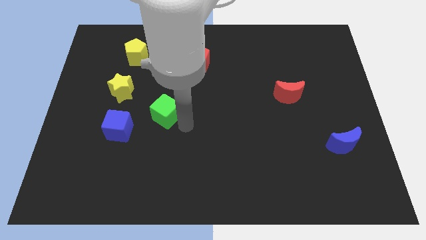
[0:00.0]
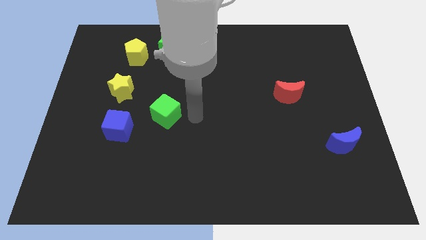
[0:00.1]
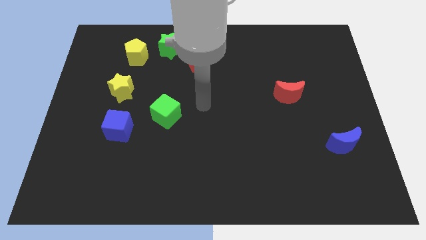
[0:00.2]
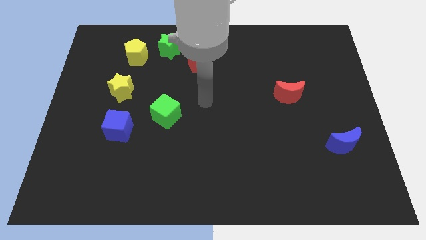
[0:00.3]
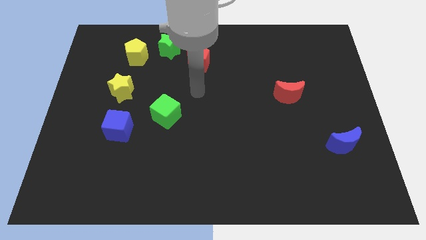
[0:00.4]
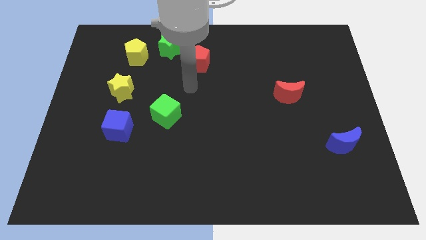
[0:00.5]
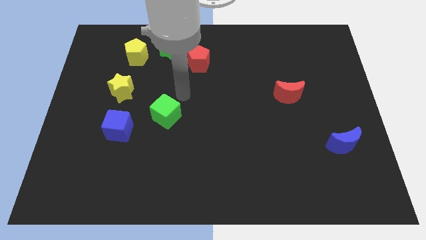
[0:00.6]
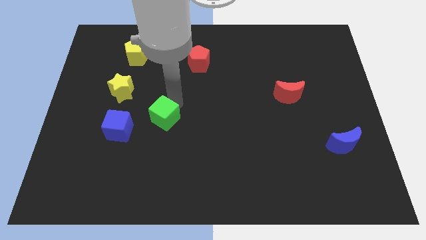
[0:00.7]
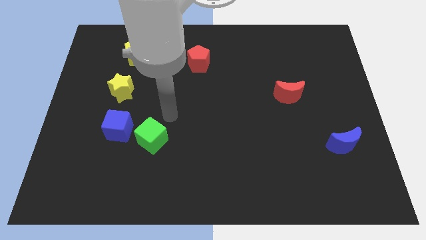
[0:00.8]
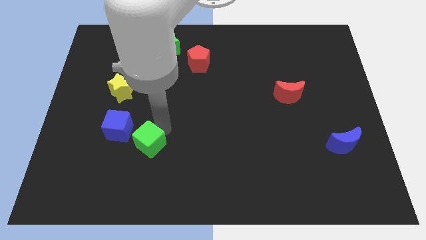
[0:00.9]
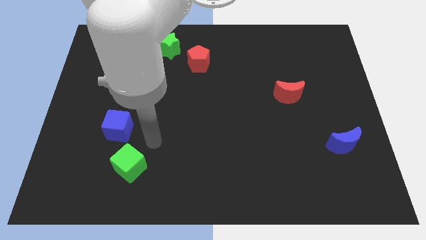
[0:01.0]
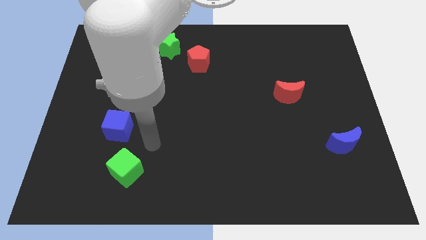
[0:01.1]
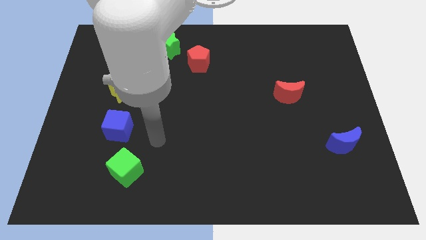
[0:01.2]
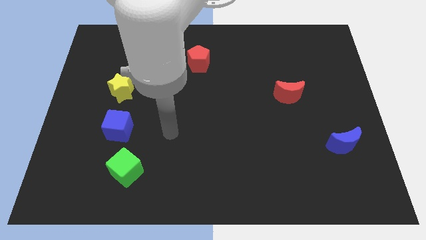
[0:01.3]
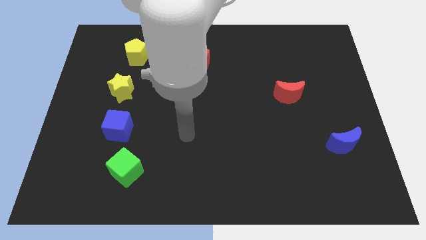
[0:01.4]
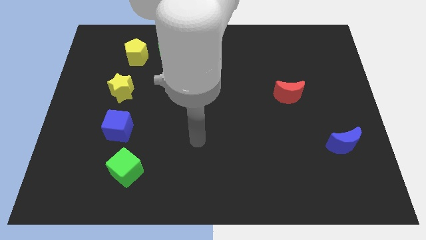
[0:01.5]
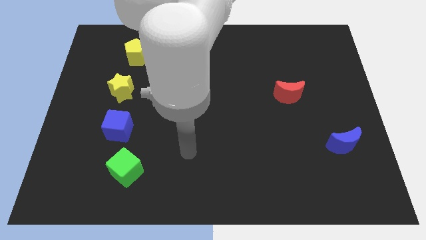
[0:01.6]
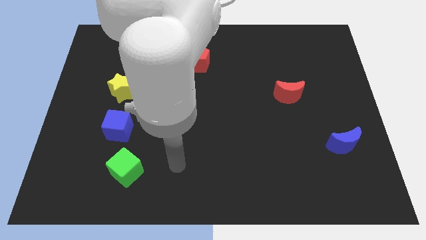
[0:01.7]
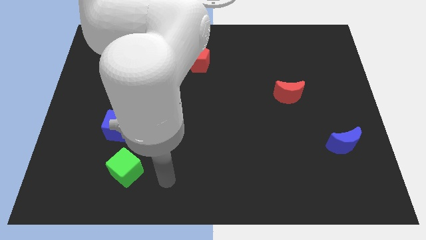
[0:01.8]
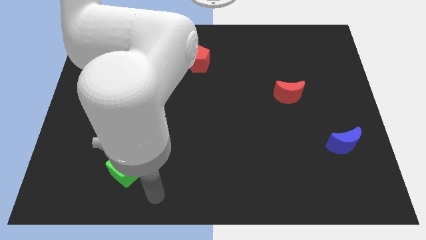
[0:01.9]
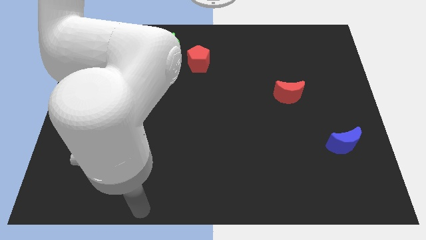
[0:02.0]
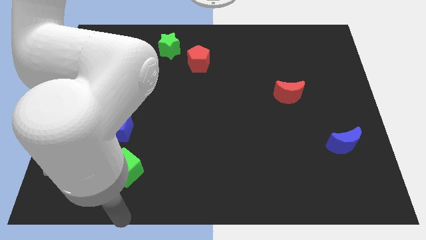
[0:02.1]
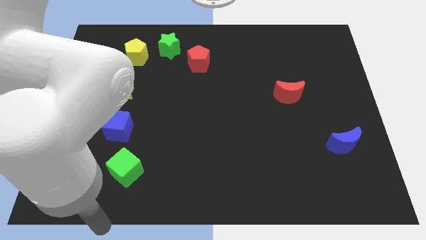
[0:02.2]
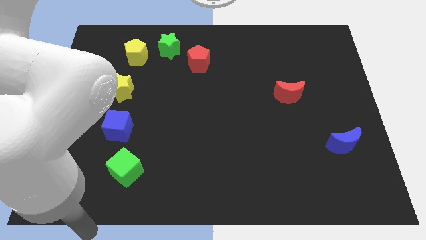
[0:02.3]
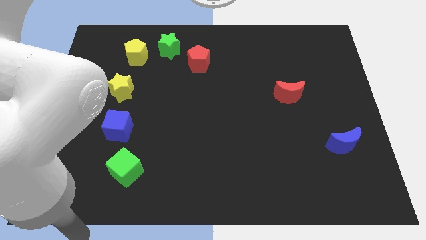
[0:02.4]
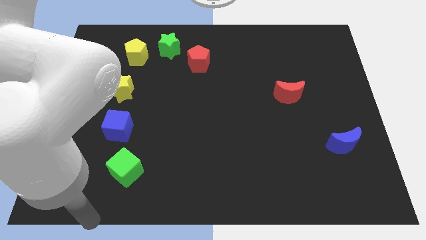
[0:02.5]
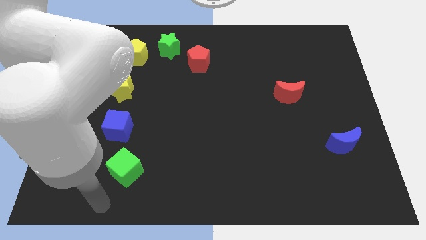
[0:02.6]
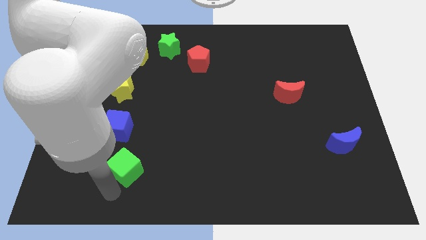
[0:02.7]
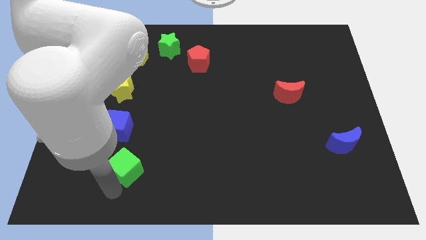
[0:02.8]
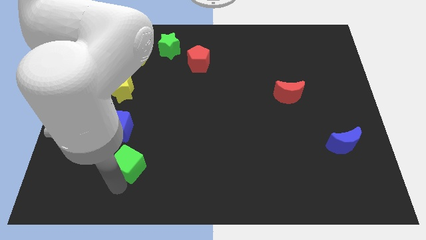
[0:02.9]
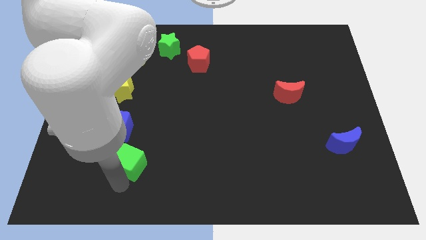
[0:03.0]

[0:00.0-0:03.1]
place the green cube below to the blue cube

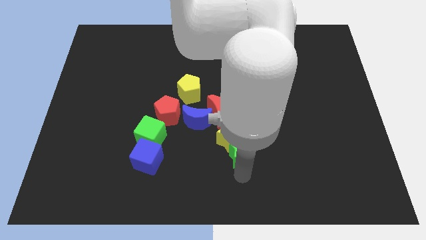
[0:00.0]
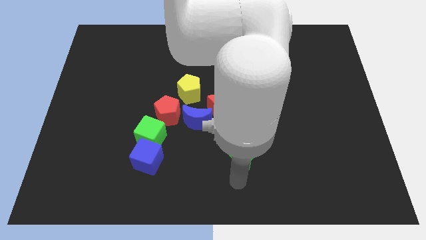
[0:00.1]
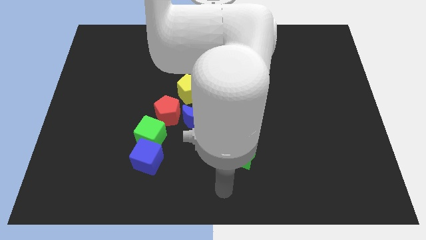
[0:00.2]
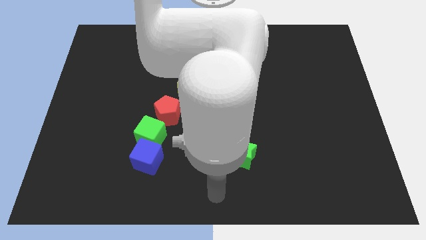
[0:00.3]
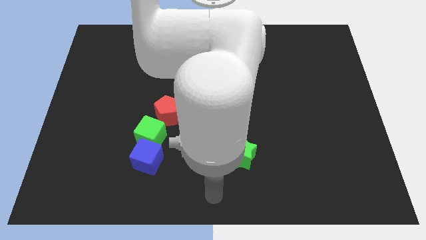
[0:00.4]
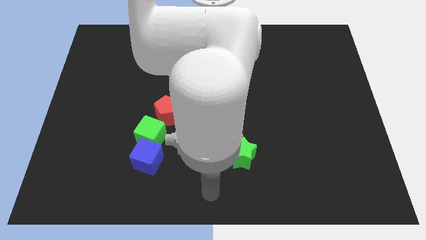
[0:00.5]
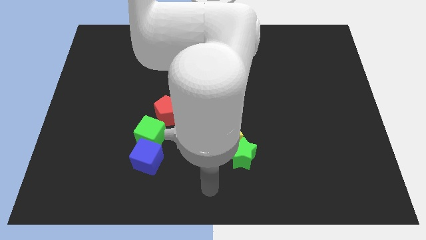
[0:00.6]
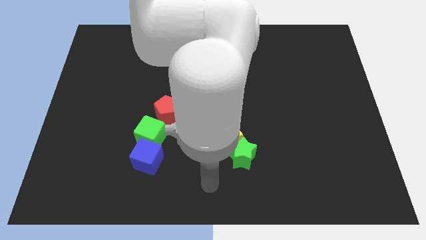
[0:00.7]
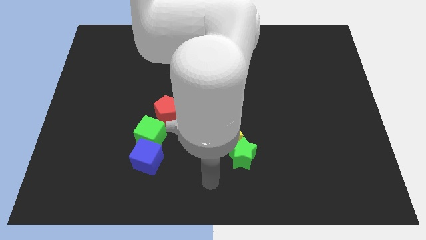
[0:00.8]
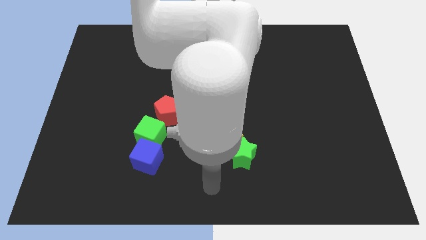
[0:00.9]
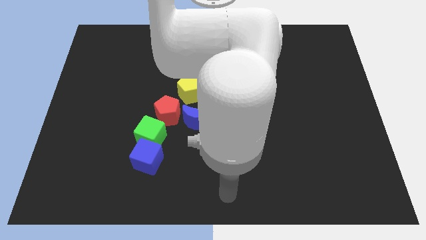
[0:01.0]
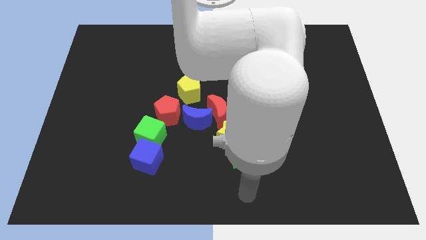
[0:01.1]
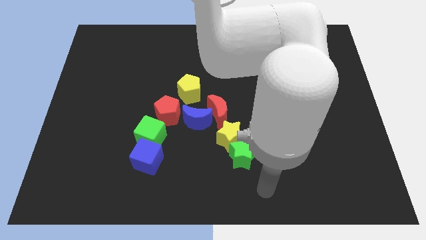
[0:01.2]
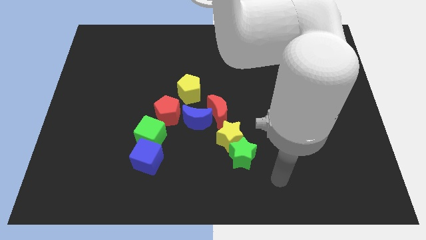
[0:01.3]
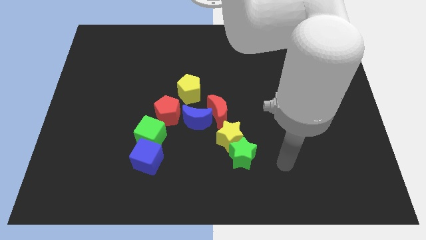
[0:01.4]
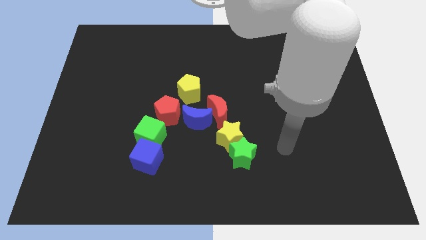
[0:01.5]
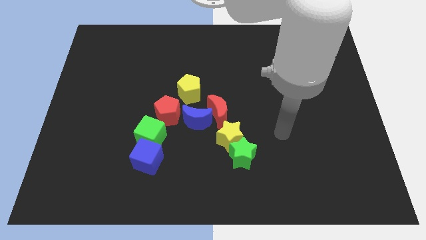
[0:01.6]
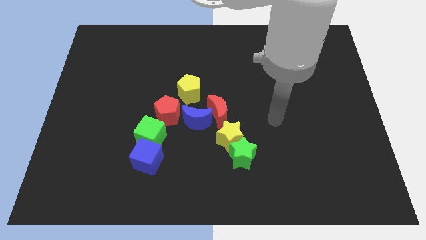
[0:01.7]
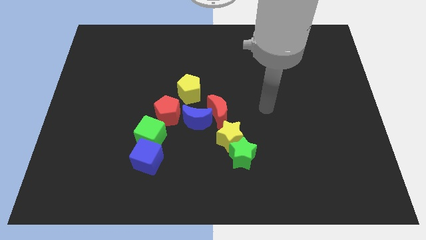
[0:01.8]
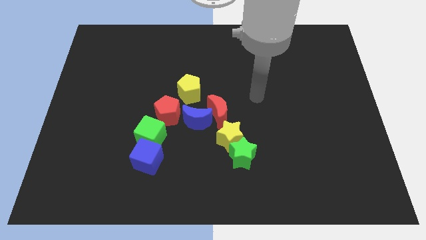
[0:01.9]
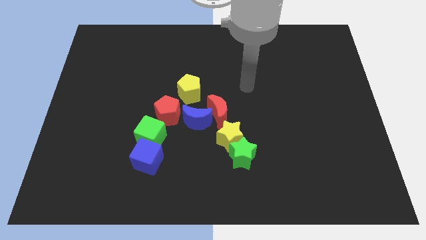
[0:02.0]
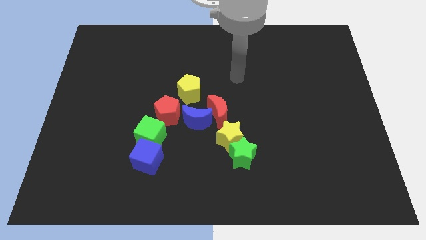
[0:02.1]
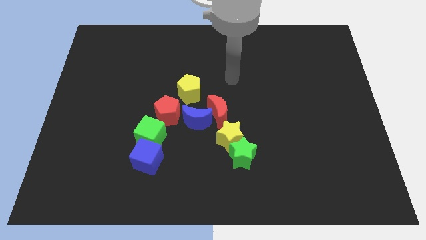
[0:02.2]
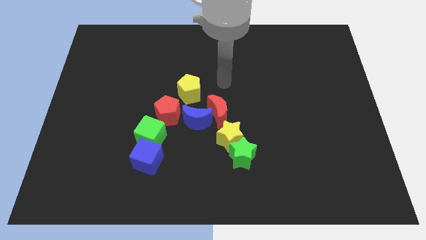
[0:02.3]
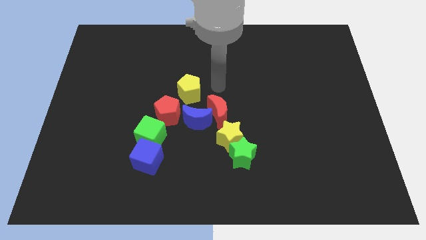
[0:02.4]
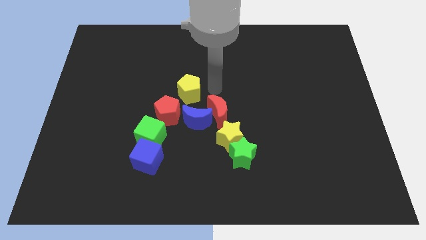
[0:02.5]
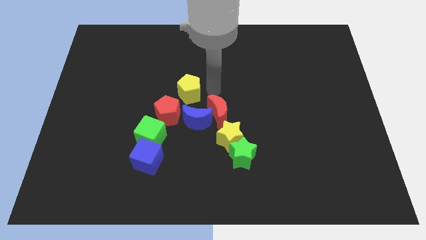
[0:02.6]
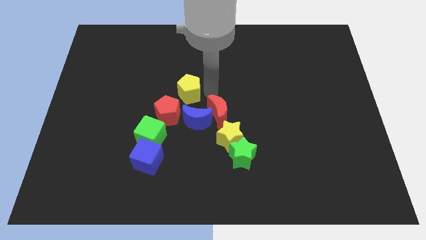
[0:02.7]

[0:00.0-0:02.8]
place your arm at the top of red crescent

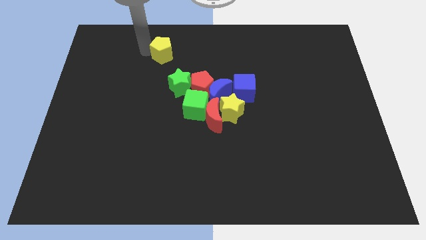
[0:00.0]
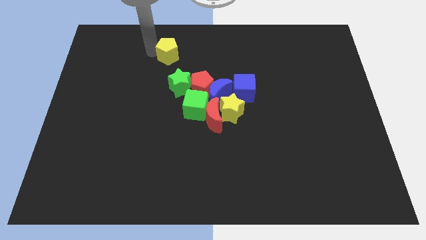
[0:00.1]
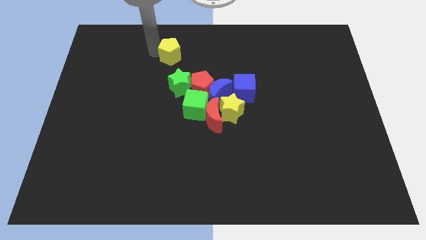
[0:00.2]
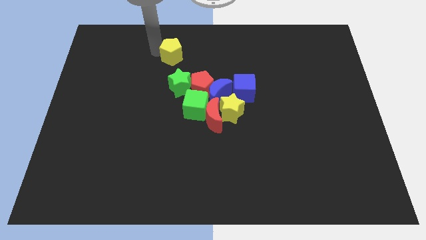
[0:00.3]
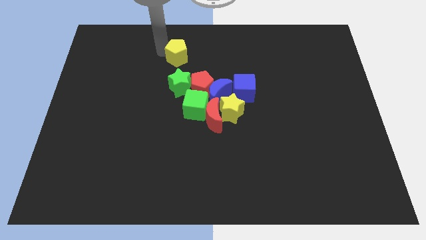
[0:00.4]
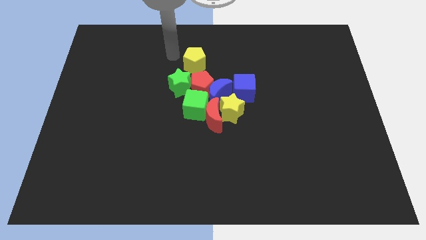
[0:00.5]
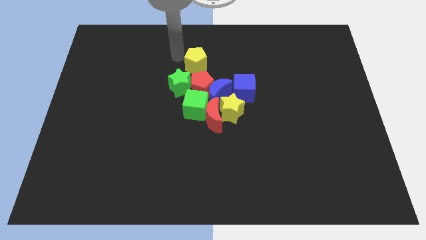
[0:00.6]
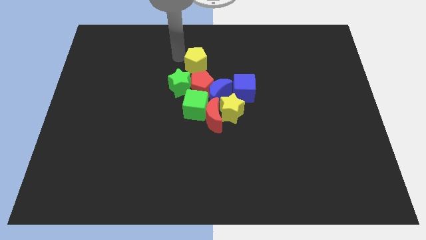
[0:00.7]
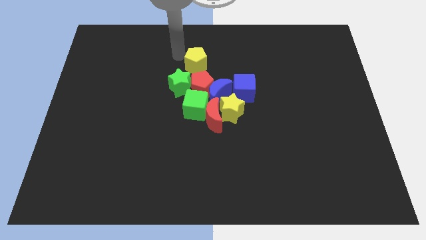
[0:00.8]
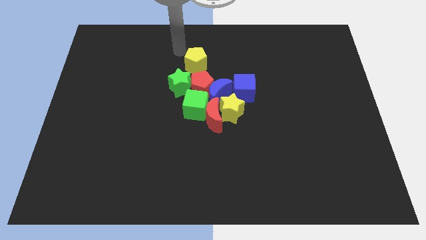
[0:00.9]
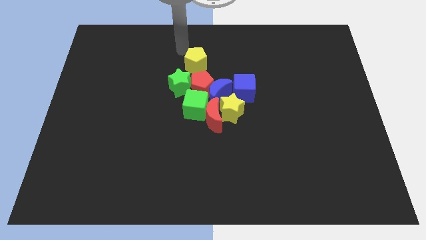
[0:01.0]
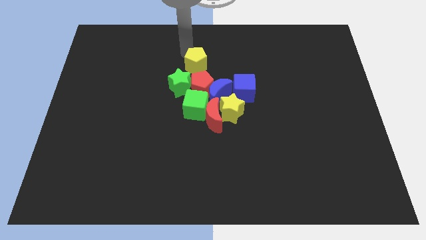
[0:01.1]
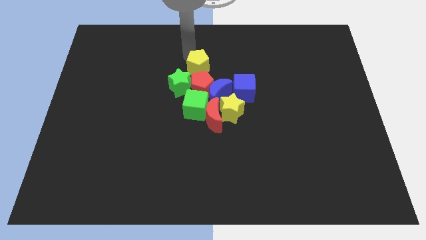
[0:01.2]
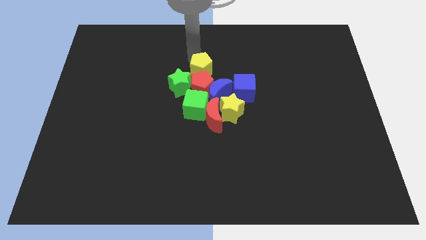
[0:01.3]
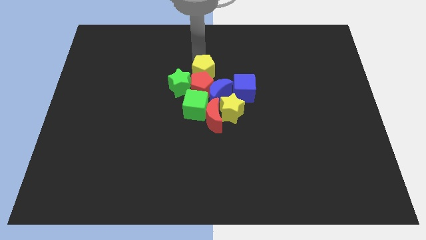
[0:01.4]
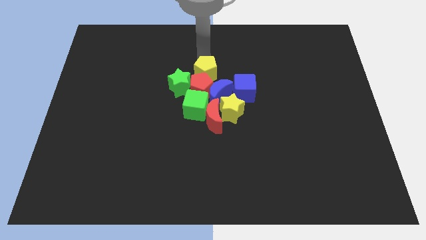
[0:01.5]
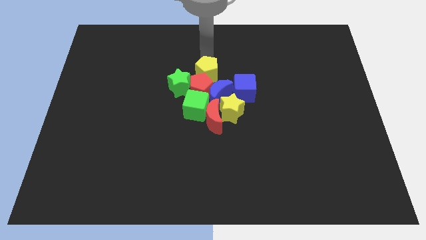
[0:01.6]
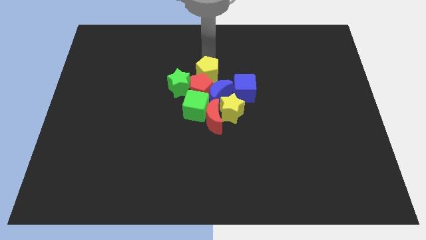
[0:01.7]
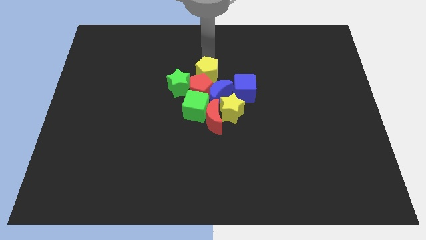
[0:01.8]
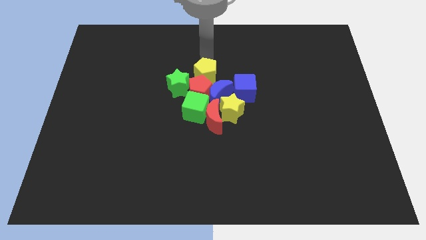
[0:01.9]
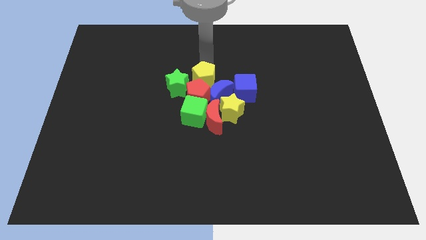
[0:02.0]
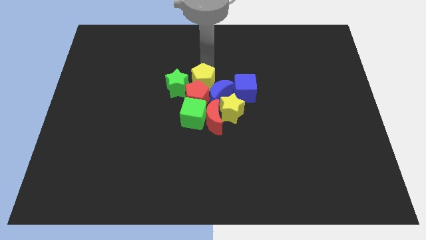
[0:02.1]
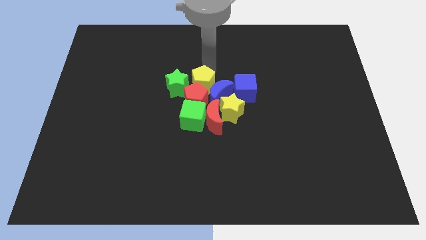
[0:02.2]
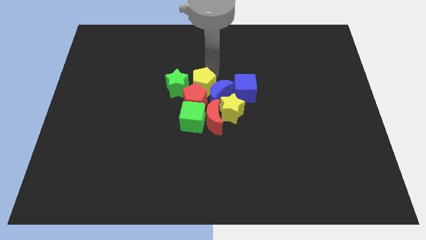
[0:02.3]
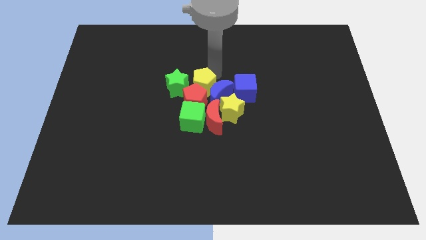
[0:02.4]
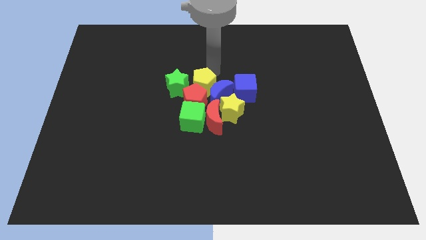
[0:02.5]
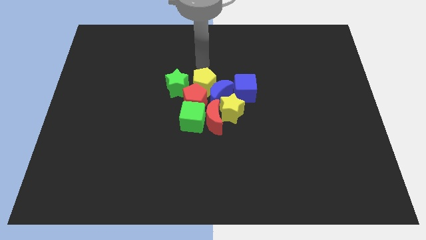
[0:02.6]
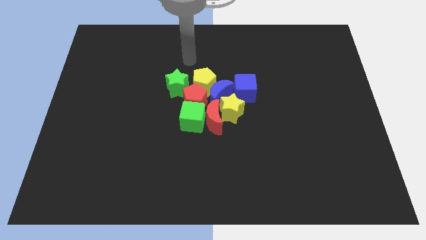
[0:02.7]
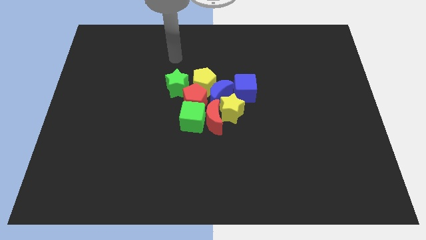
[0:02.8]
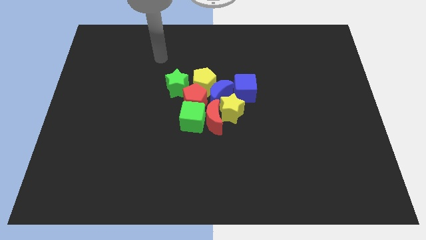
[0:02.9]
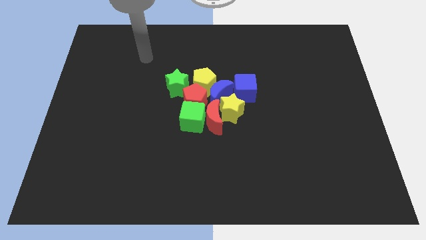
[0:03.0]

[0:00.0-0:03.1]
push the yellow pentagon into the red pentagon
